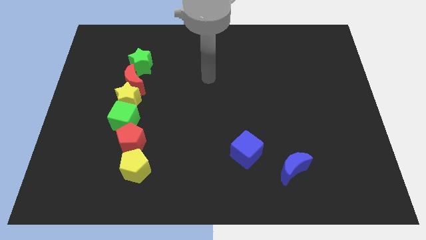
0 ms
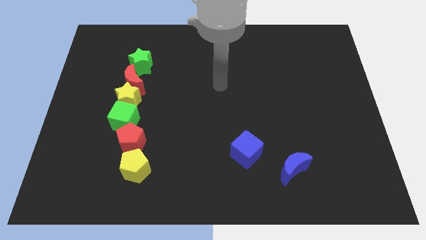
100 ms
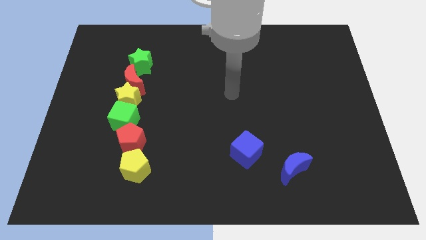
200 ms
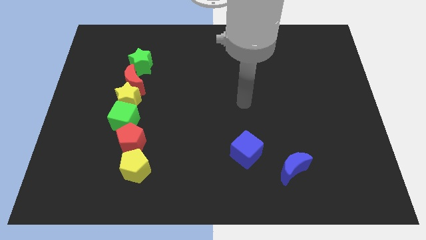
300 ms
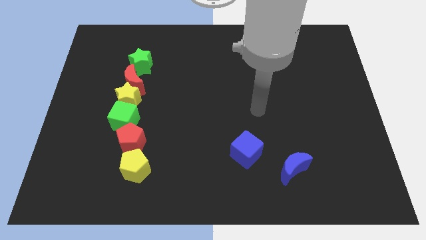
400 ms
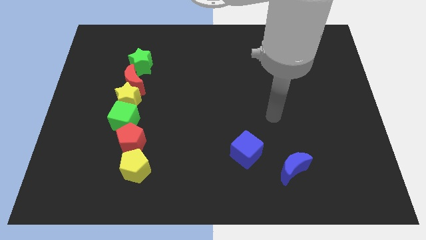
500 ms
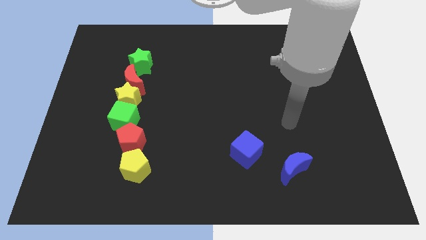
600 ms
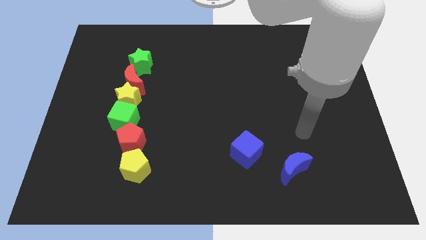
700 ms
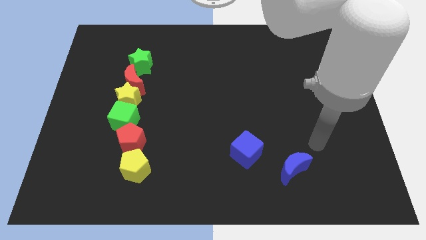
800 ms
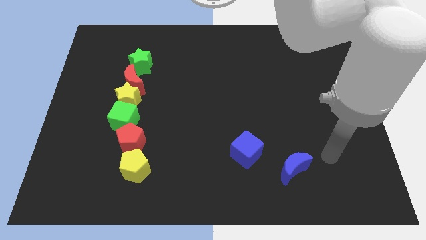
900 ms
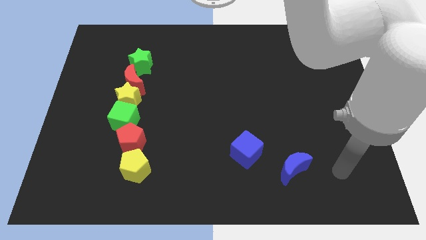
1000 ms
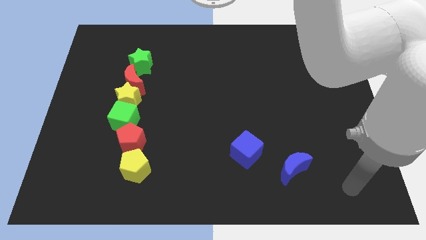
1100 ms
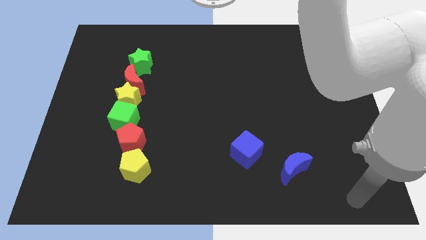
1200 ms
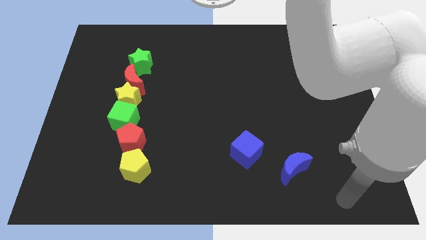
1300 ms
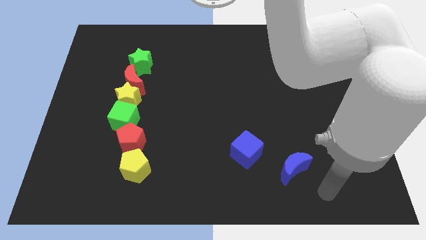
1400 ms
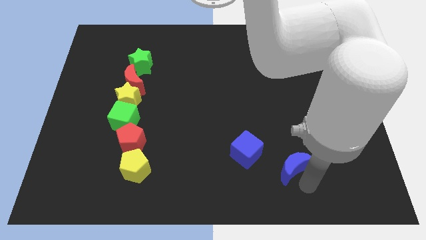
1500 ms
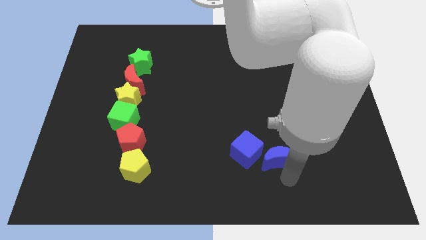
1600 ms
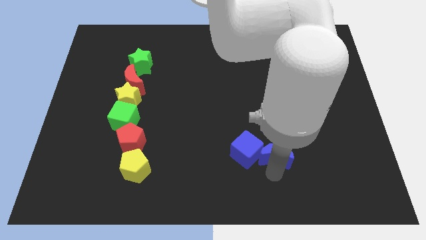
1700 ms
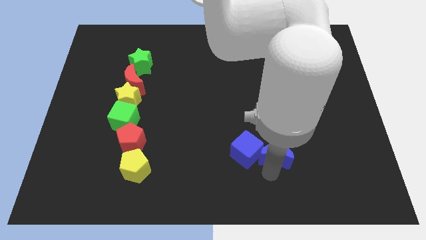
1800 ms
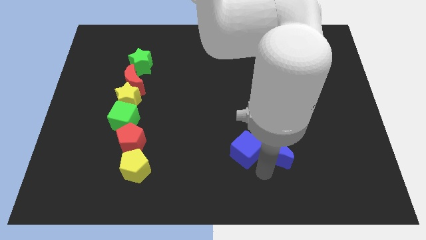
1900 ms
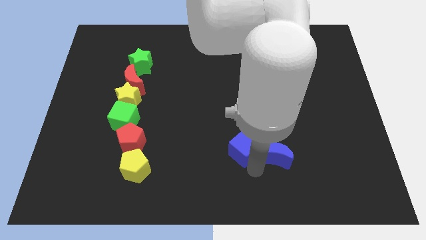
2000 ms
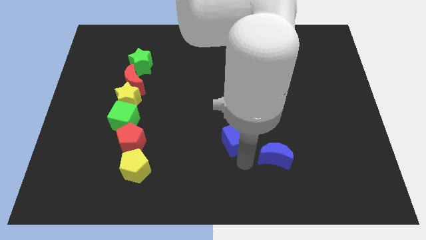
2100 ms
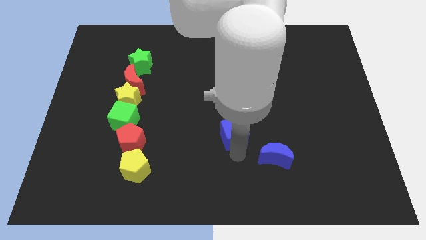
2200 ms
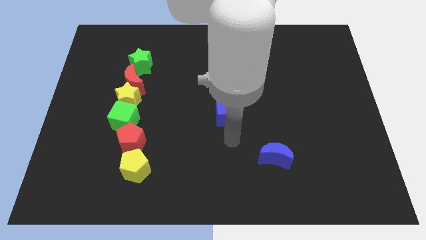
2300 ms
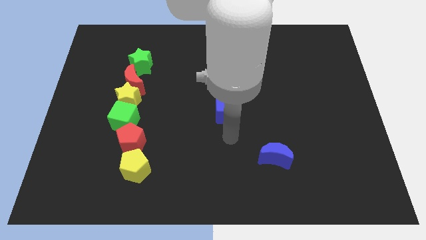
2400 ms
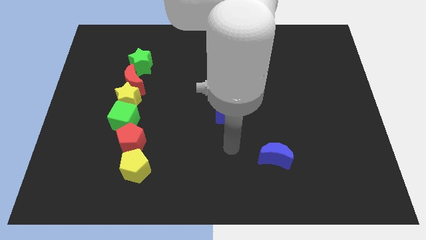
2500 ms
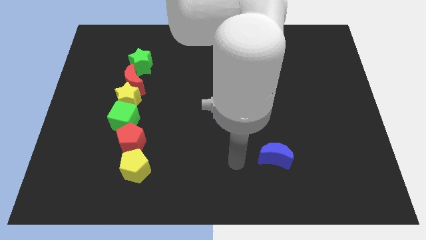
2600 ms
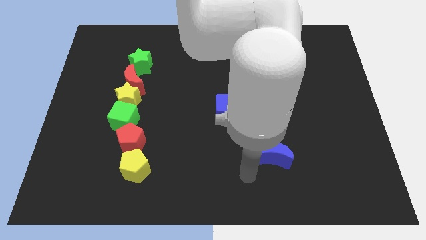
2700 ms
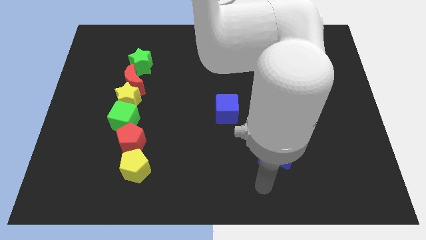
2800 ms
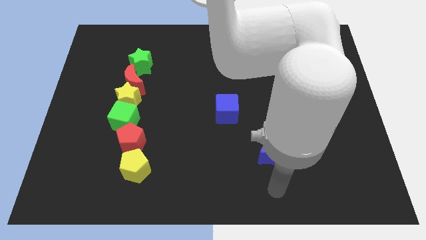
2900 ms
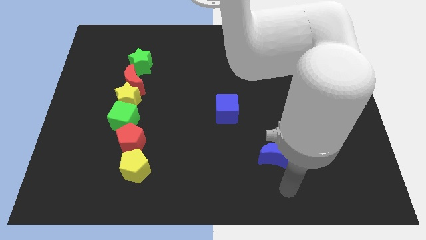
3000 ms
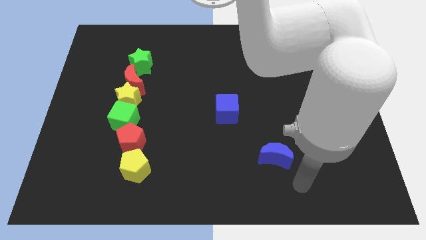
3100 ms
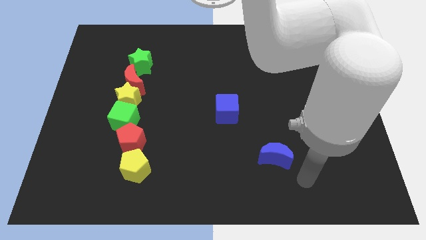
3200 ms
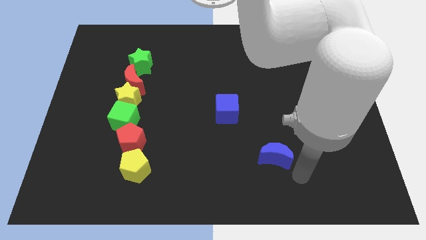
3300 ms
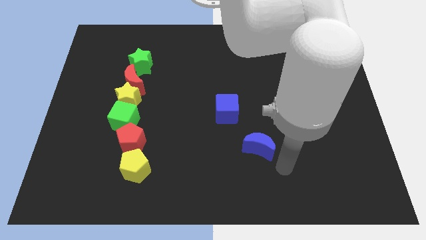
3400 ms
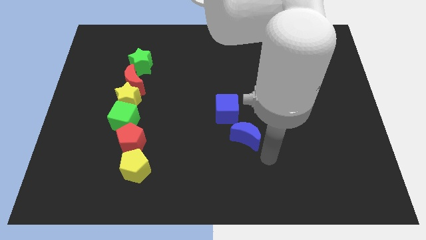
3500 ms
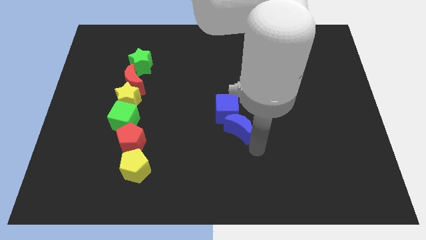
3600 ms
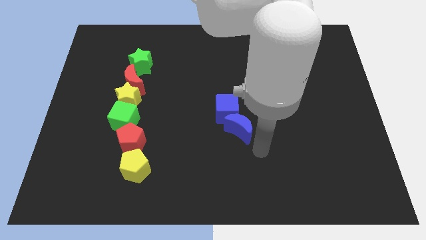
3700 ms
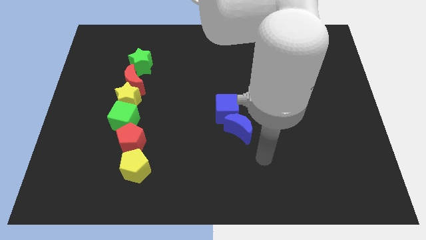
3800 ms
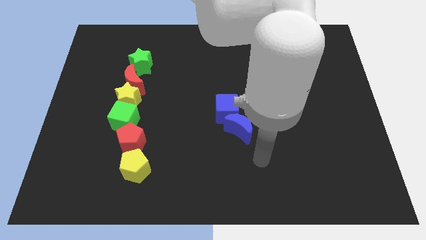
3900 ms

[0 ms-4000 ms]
place the blue blocks horizontally right to the green cube

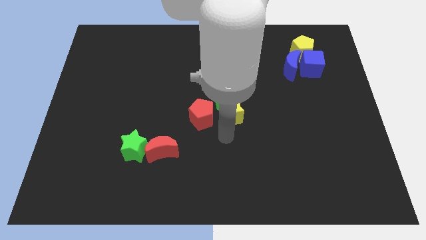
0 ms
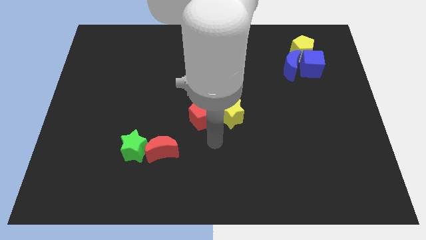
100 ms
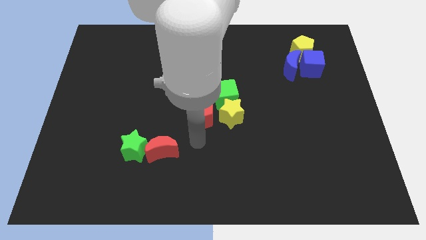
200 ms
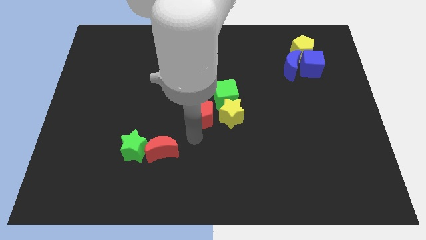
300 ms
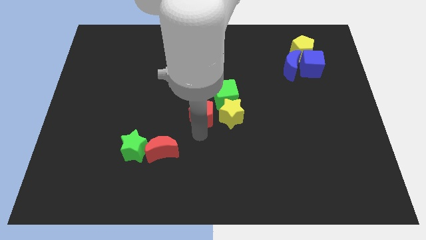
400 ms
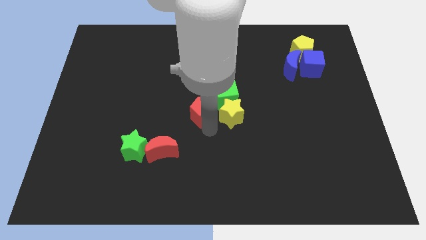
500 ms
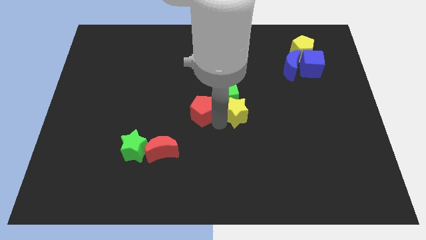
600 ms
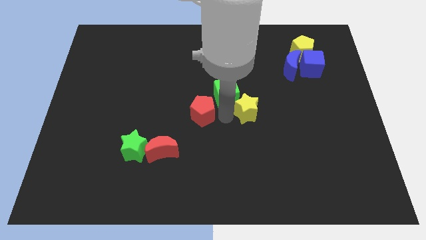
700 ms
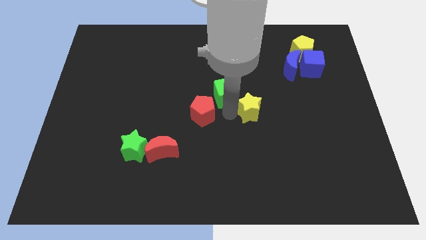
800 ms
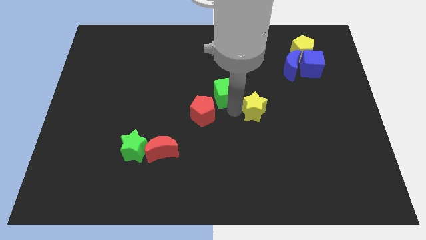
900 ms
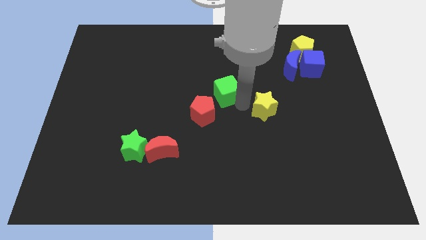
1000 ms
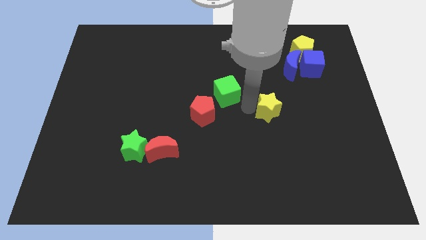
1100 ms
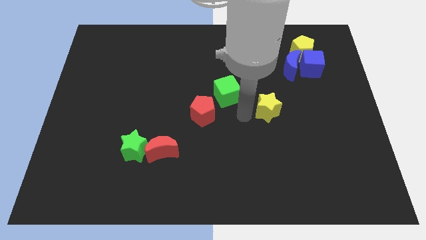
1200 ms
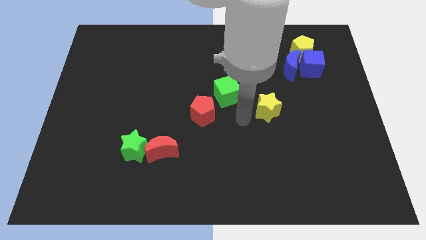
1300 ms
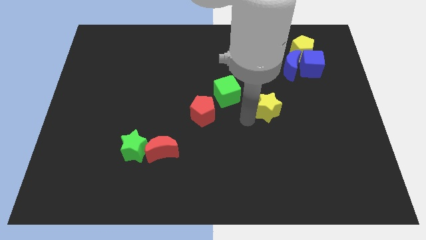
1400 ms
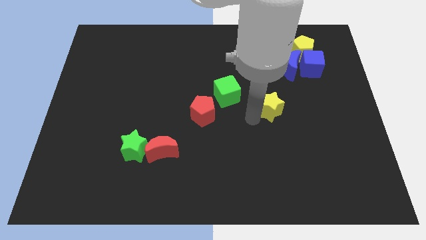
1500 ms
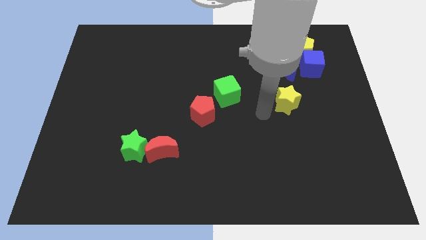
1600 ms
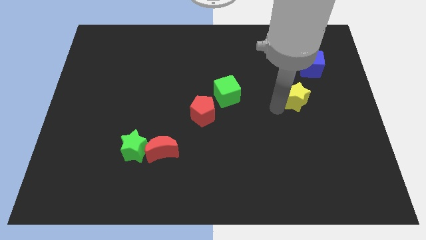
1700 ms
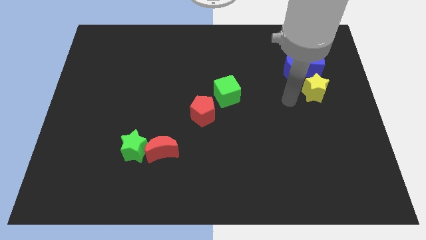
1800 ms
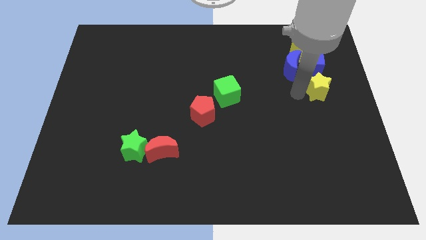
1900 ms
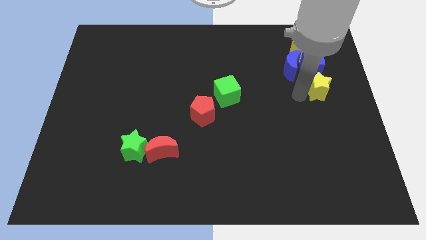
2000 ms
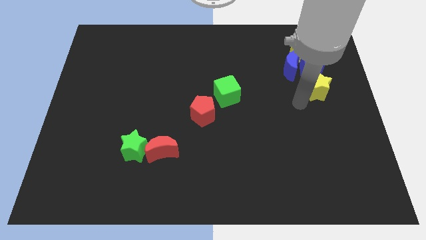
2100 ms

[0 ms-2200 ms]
put the yellow star at the bottom of blue cube

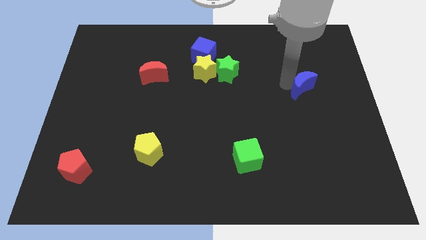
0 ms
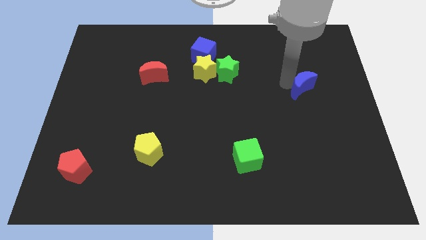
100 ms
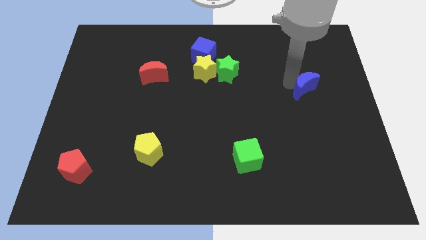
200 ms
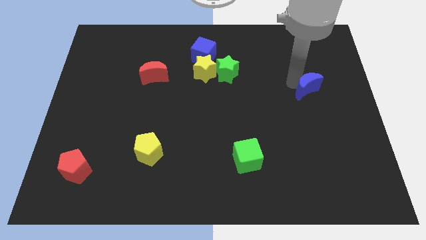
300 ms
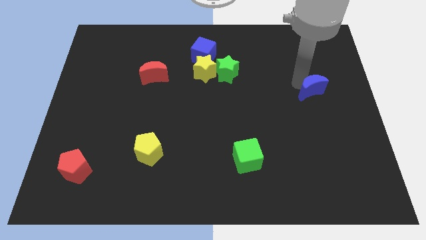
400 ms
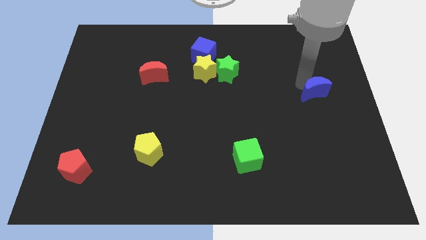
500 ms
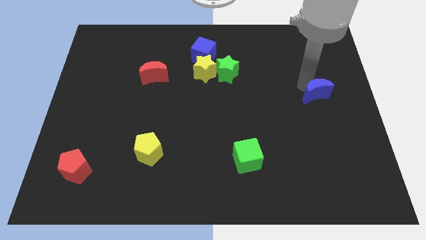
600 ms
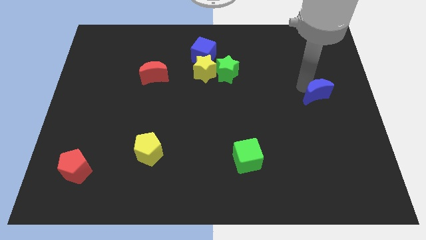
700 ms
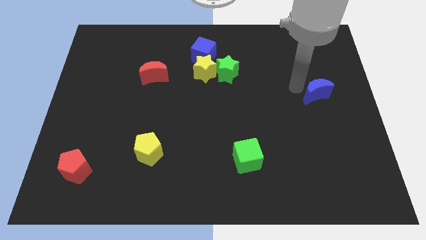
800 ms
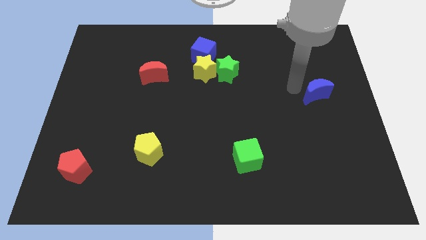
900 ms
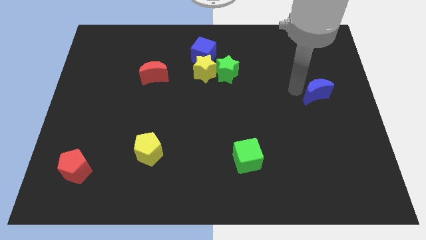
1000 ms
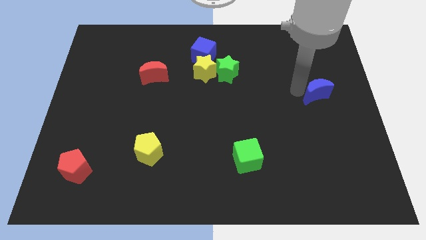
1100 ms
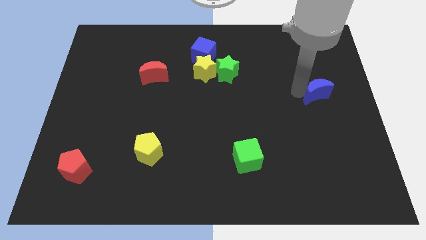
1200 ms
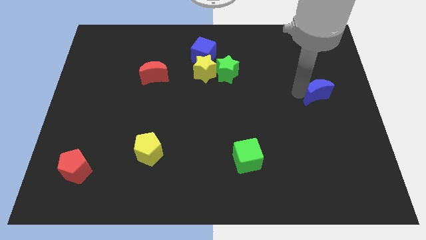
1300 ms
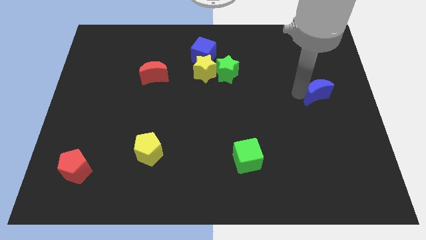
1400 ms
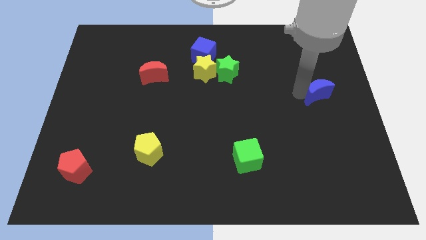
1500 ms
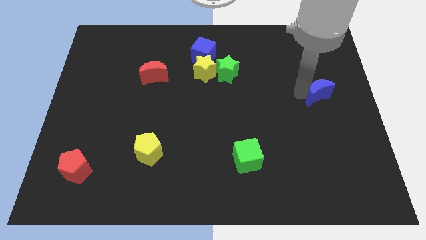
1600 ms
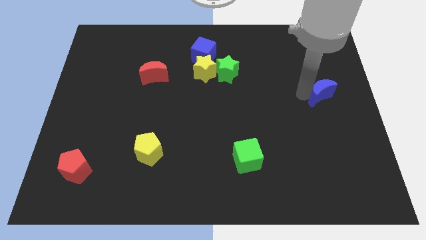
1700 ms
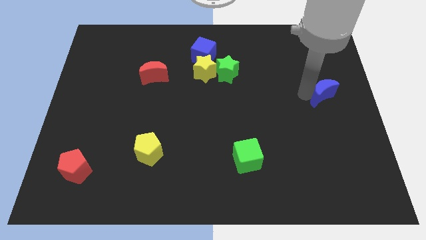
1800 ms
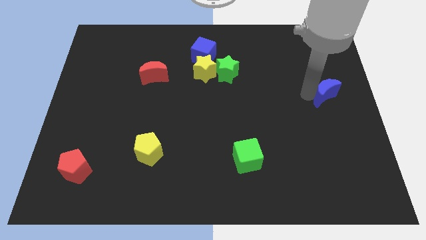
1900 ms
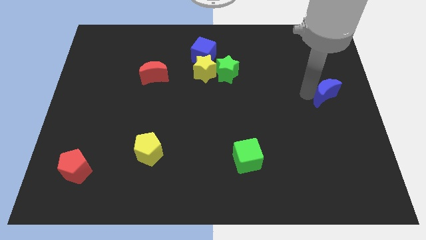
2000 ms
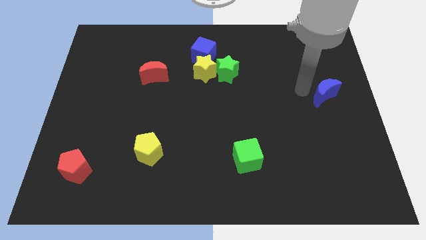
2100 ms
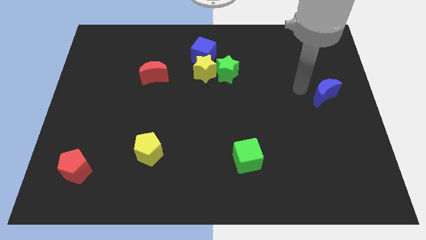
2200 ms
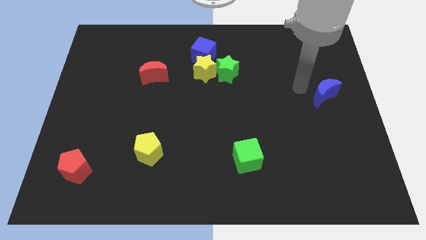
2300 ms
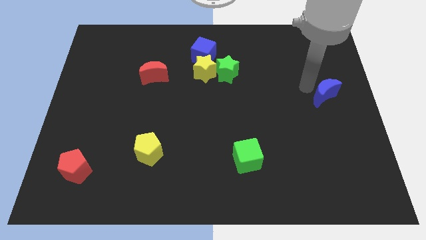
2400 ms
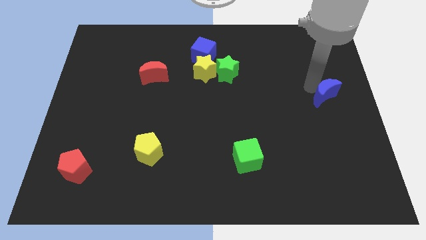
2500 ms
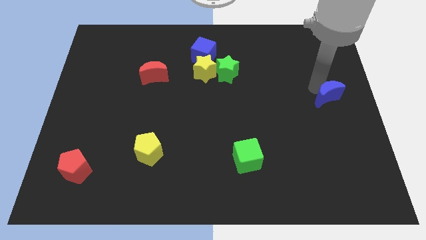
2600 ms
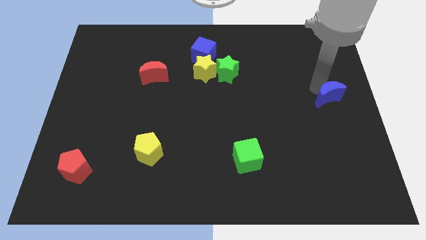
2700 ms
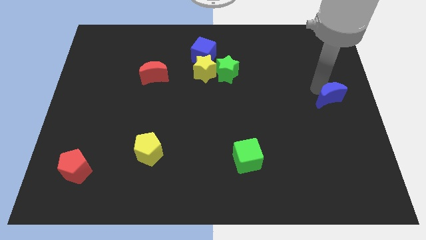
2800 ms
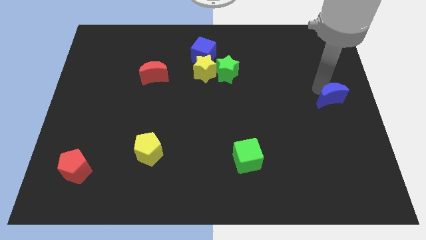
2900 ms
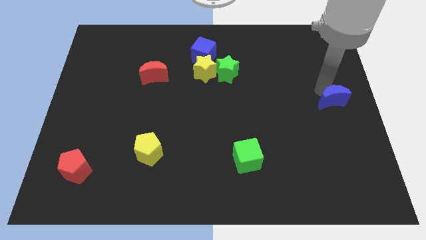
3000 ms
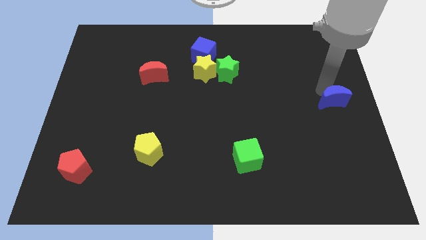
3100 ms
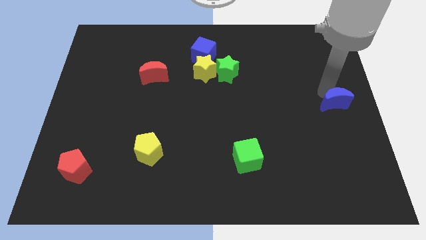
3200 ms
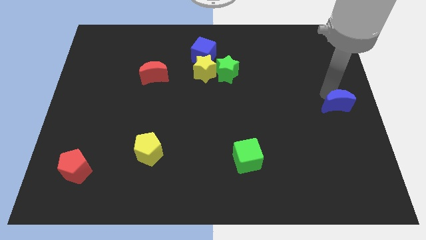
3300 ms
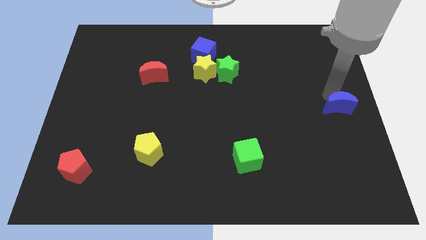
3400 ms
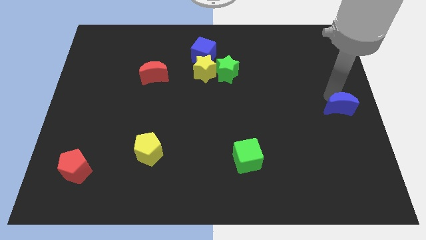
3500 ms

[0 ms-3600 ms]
place the blue crescent at the center right of the table
